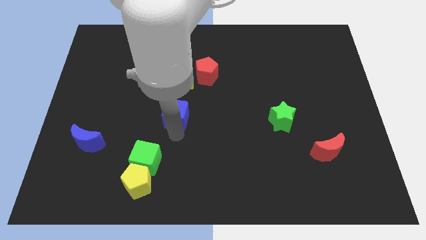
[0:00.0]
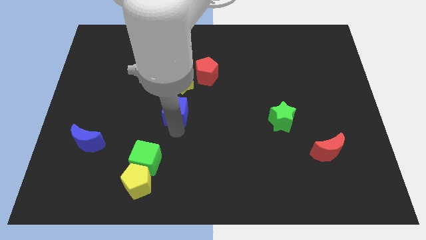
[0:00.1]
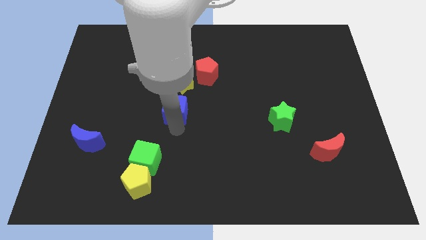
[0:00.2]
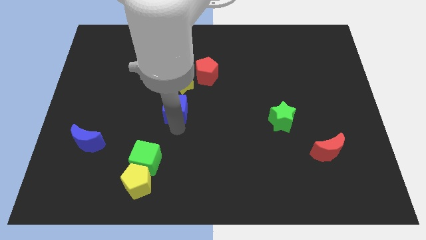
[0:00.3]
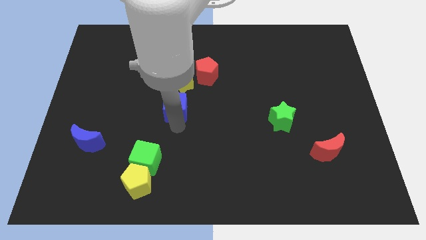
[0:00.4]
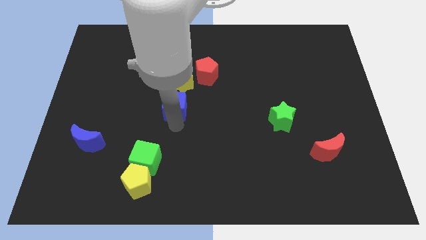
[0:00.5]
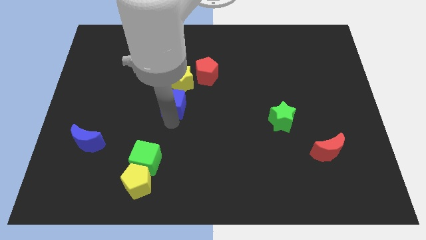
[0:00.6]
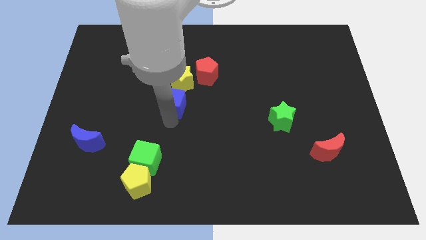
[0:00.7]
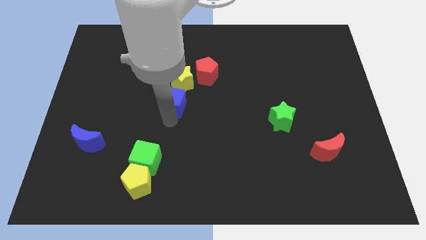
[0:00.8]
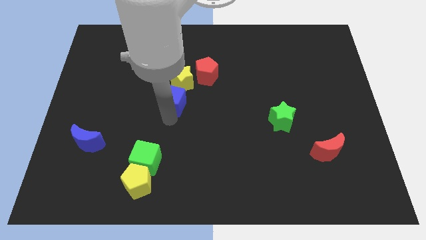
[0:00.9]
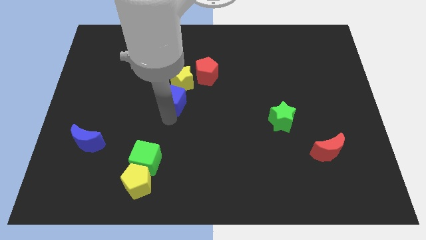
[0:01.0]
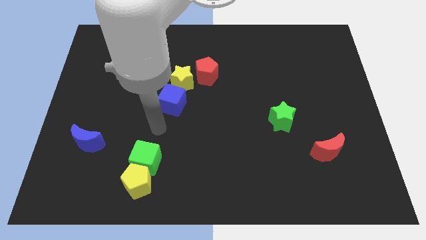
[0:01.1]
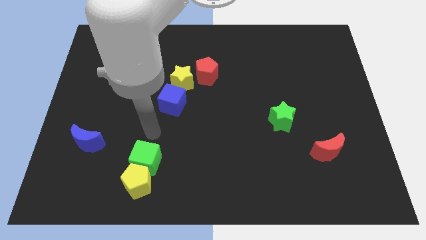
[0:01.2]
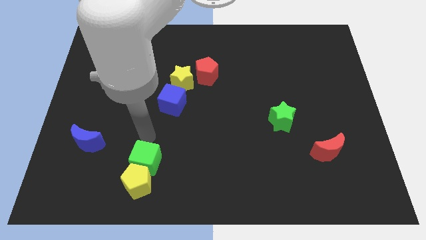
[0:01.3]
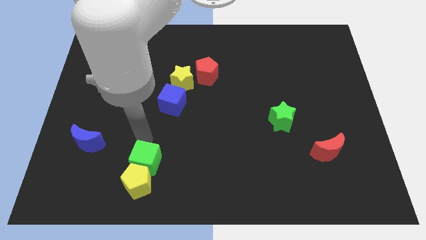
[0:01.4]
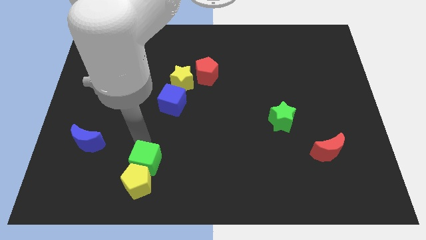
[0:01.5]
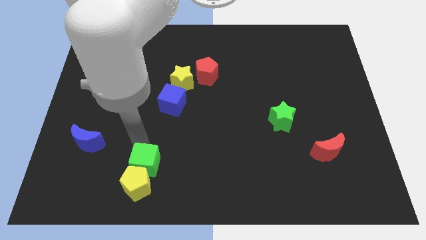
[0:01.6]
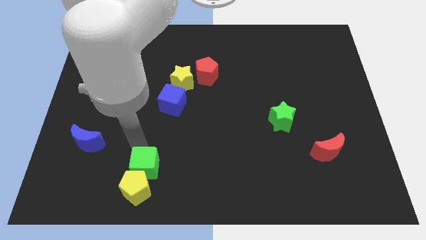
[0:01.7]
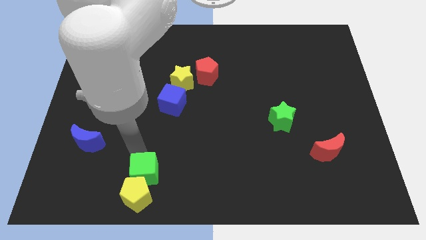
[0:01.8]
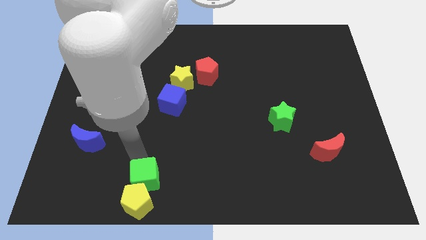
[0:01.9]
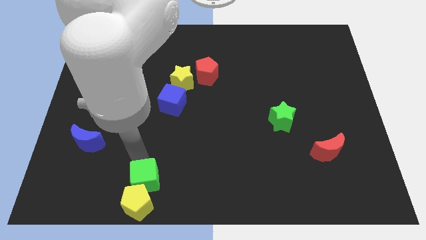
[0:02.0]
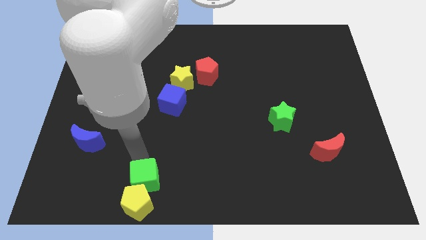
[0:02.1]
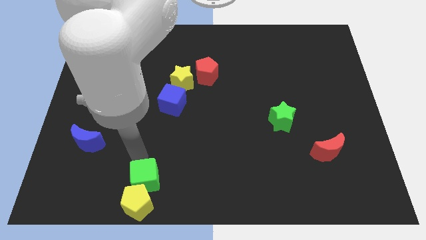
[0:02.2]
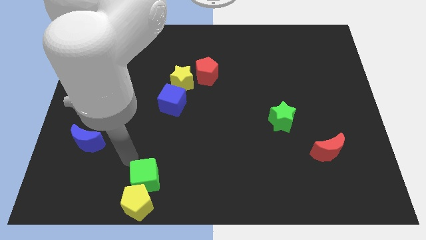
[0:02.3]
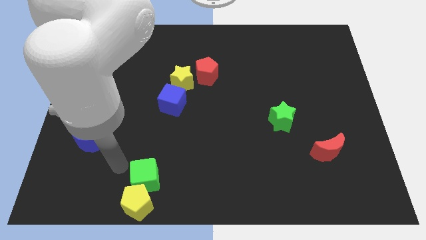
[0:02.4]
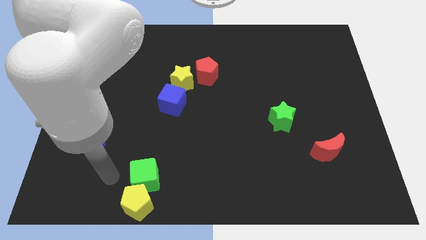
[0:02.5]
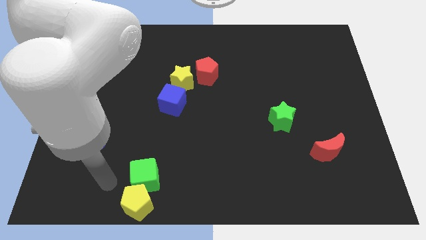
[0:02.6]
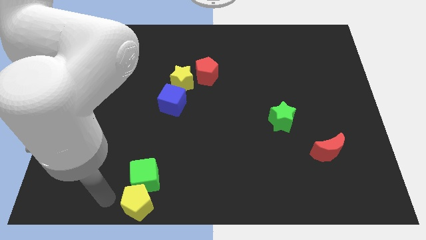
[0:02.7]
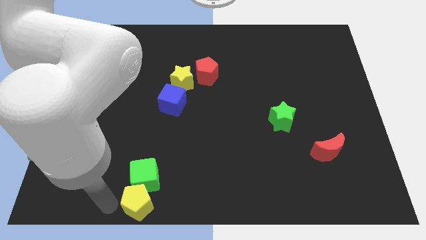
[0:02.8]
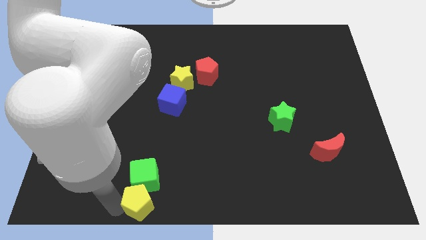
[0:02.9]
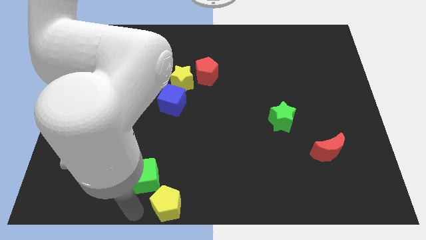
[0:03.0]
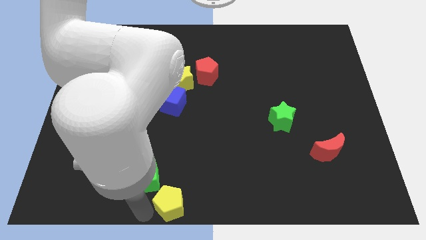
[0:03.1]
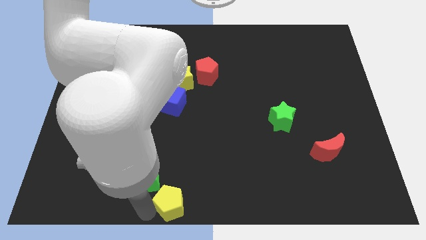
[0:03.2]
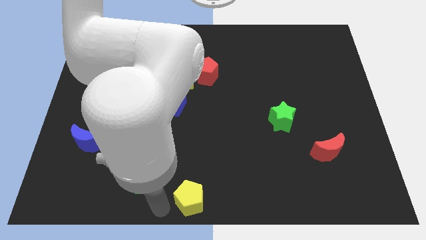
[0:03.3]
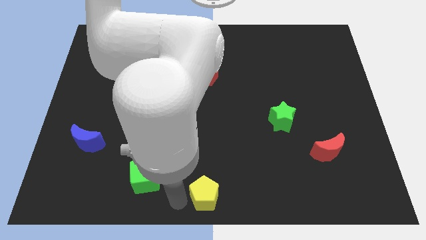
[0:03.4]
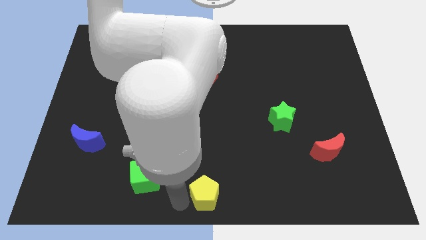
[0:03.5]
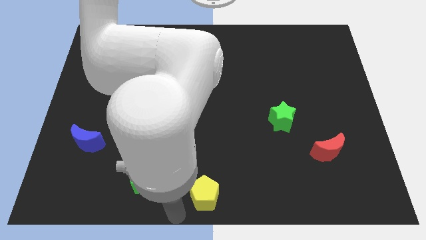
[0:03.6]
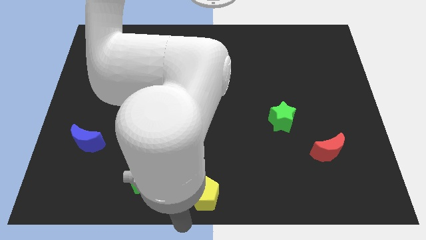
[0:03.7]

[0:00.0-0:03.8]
push the yellow pentagon to the right

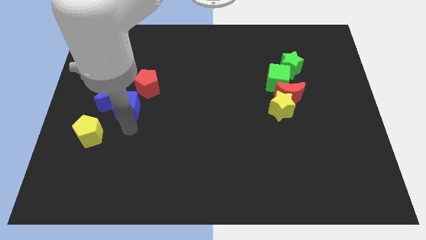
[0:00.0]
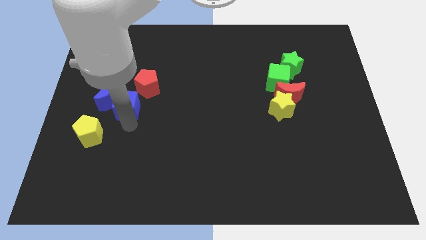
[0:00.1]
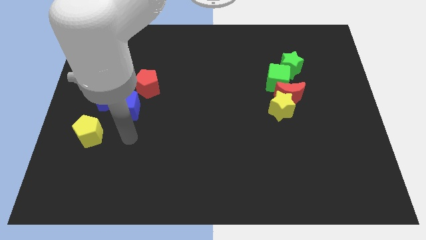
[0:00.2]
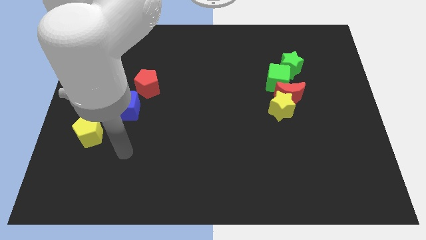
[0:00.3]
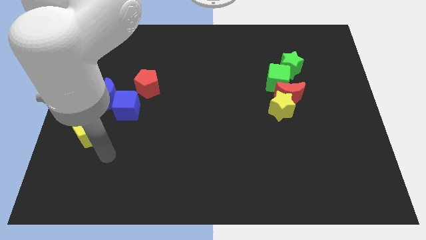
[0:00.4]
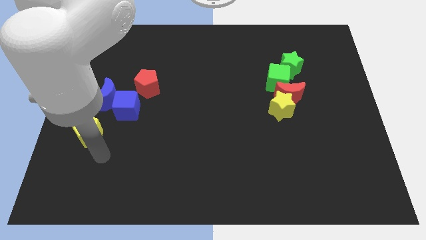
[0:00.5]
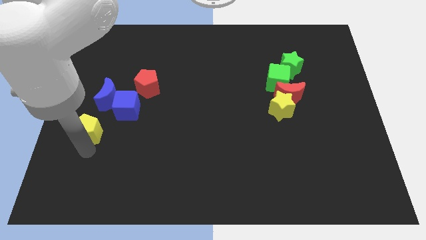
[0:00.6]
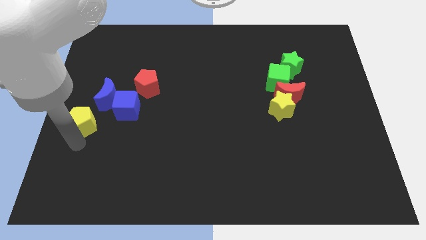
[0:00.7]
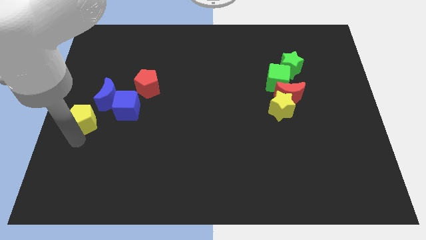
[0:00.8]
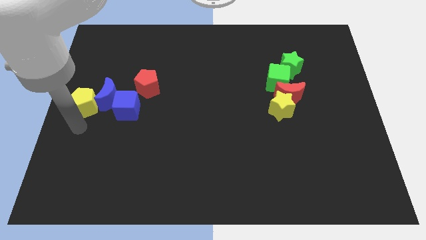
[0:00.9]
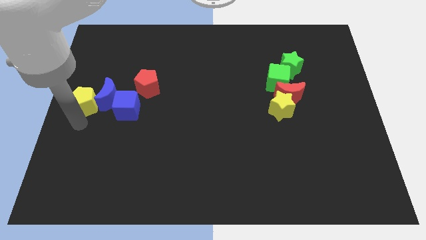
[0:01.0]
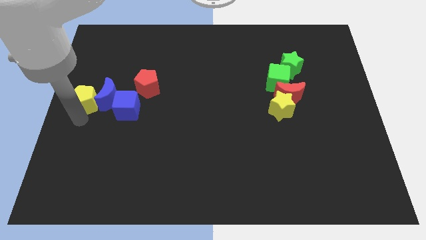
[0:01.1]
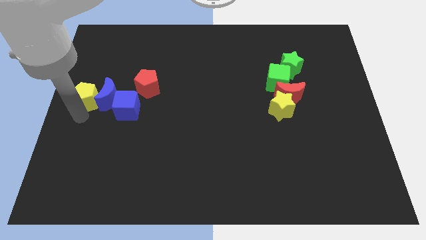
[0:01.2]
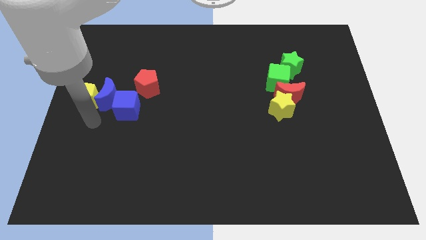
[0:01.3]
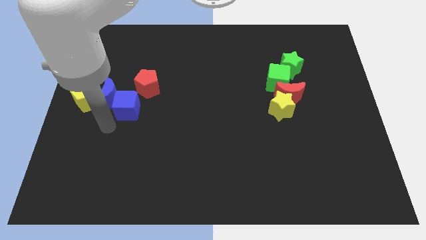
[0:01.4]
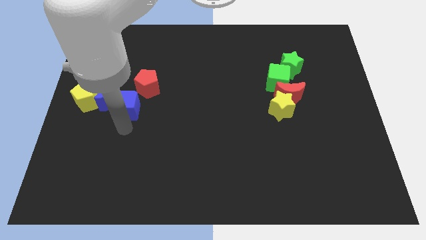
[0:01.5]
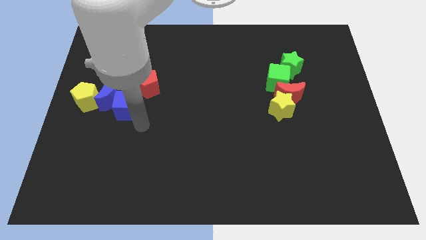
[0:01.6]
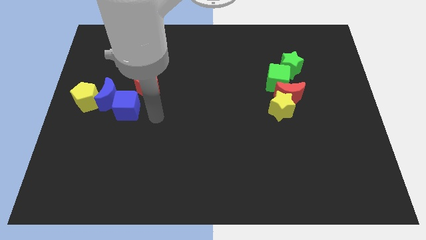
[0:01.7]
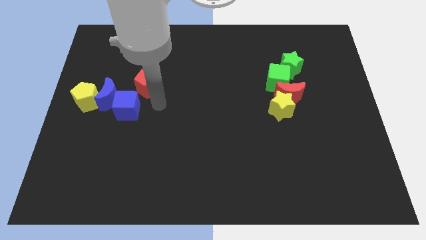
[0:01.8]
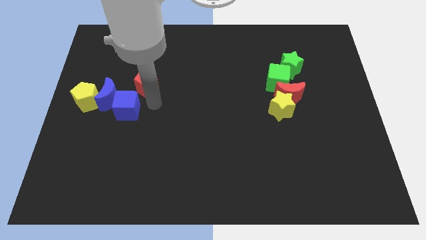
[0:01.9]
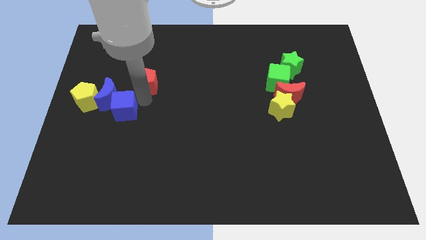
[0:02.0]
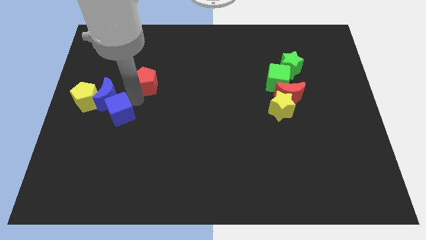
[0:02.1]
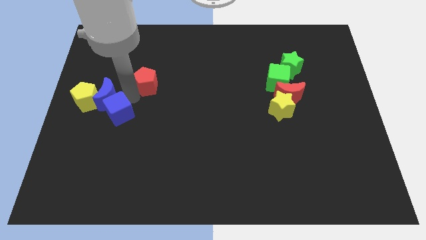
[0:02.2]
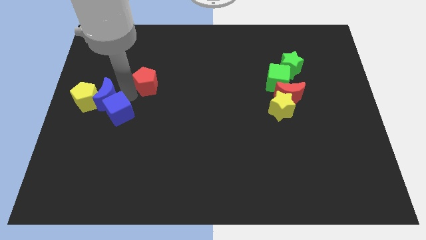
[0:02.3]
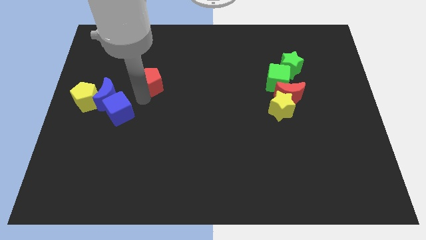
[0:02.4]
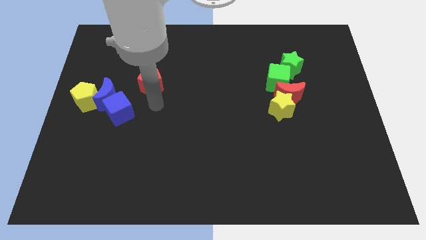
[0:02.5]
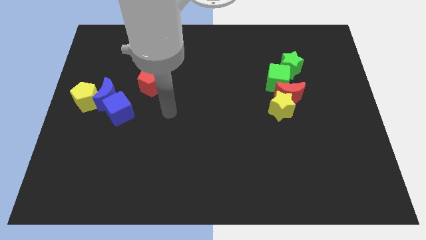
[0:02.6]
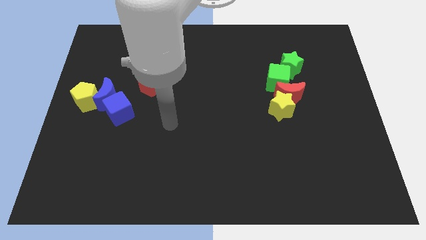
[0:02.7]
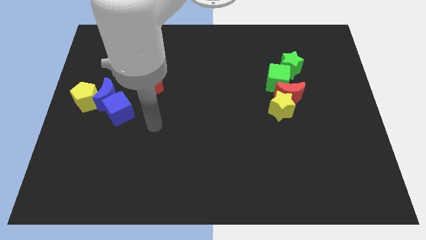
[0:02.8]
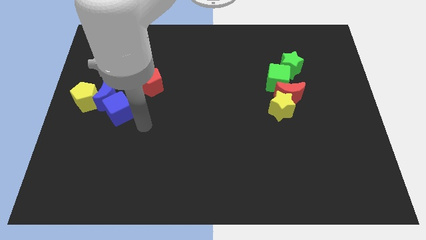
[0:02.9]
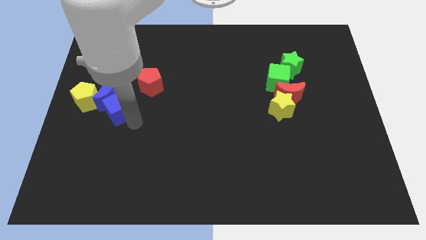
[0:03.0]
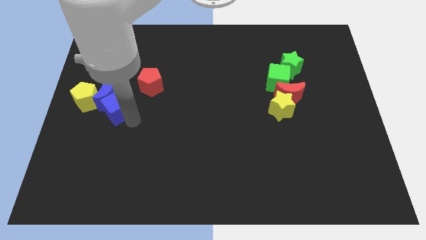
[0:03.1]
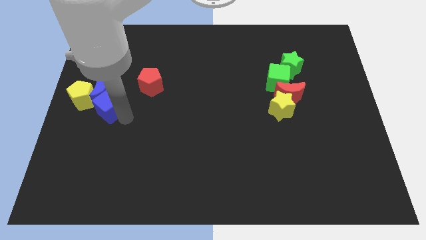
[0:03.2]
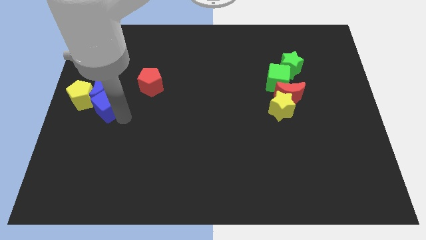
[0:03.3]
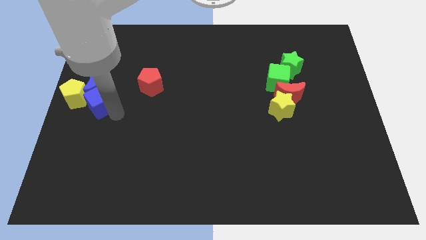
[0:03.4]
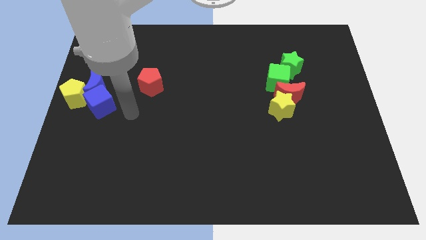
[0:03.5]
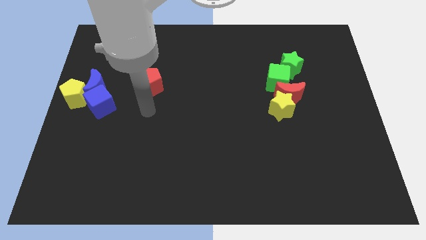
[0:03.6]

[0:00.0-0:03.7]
place the yellow pentagon towards the bottom left side of the blue crescent

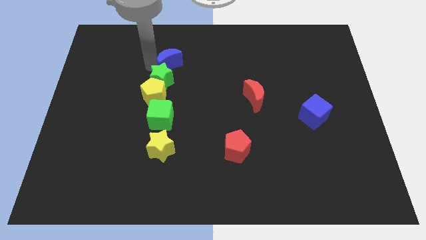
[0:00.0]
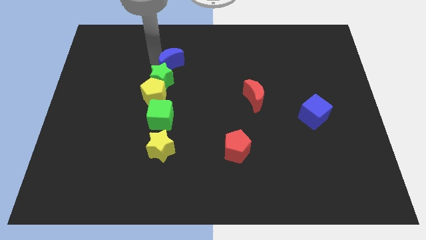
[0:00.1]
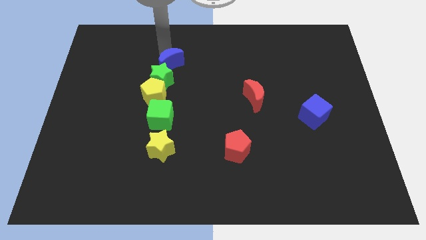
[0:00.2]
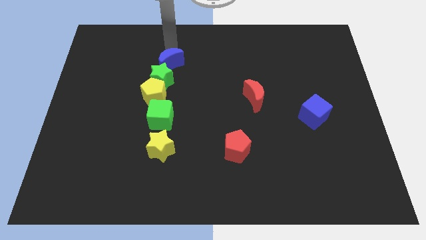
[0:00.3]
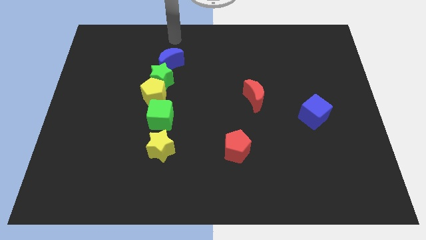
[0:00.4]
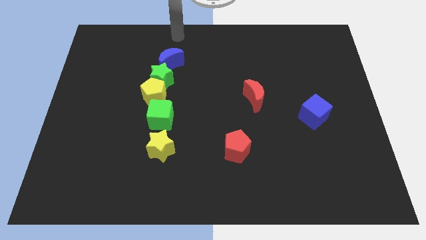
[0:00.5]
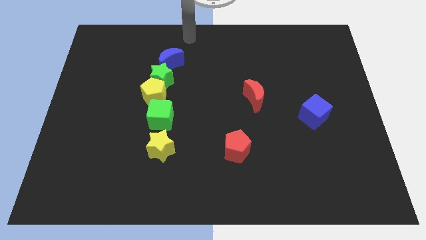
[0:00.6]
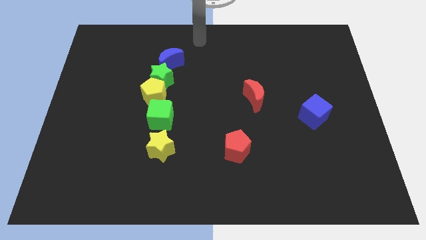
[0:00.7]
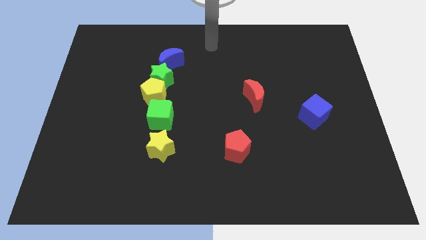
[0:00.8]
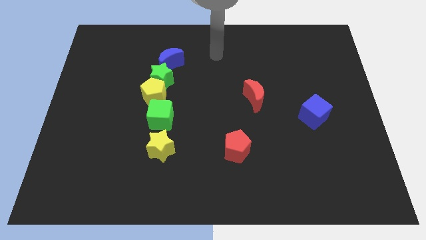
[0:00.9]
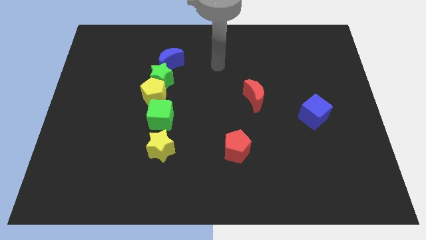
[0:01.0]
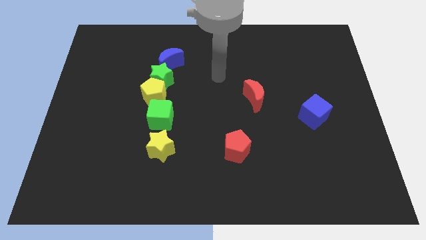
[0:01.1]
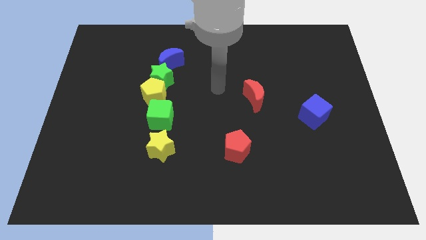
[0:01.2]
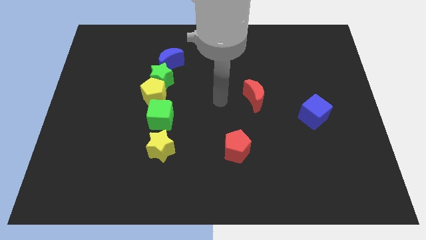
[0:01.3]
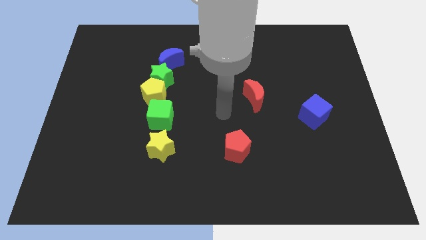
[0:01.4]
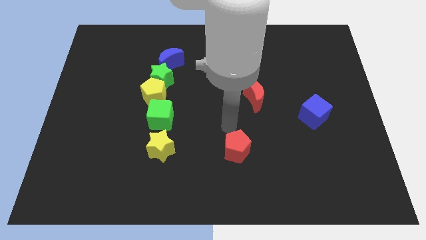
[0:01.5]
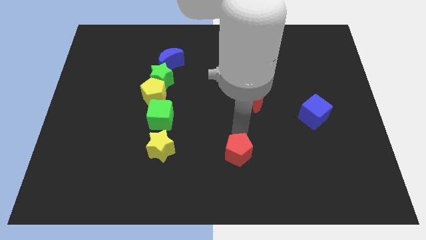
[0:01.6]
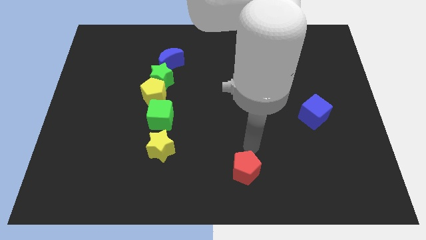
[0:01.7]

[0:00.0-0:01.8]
move the red pentagon toward the bottom center
